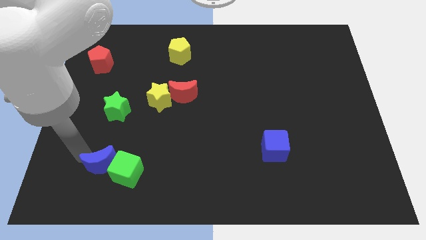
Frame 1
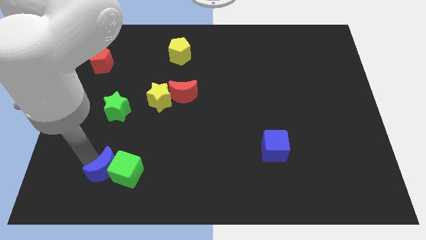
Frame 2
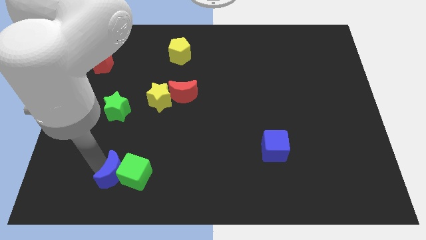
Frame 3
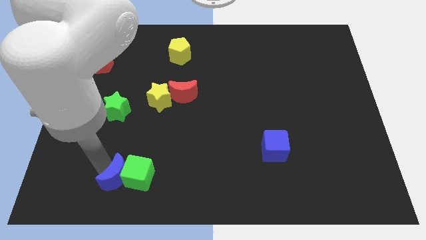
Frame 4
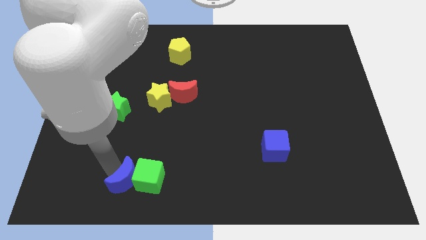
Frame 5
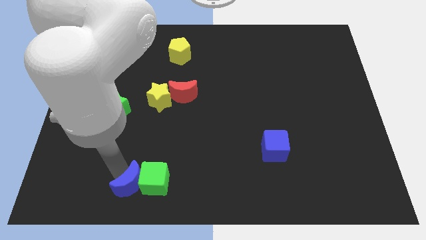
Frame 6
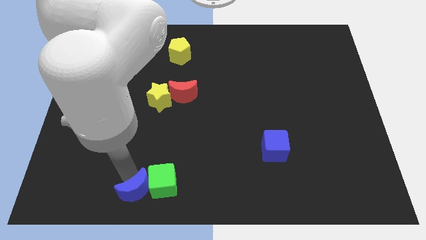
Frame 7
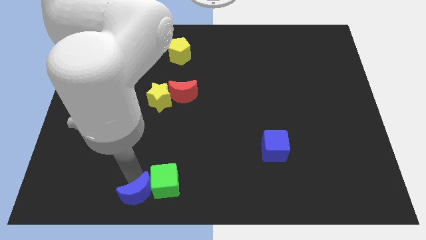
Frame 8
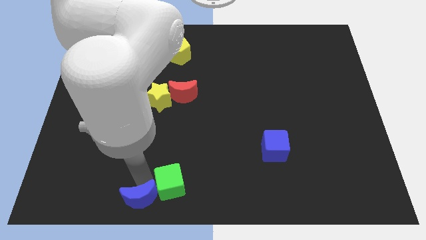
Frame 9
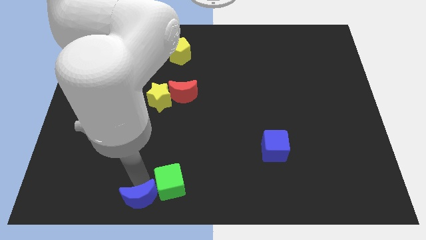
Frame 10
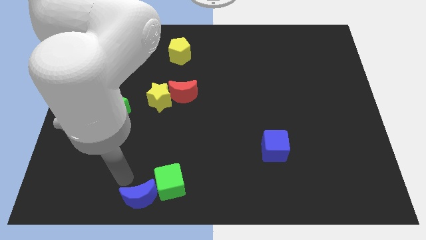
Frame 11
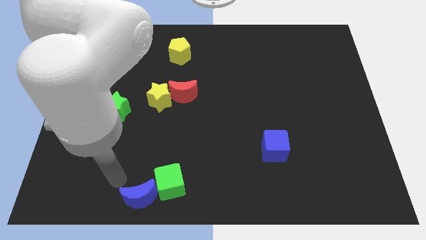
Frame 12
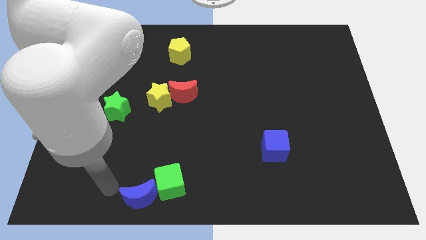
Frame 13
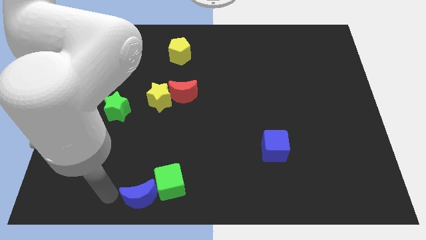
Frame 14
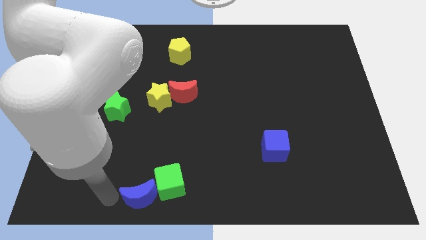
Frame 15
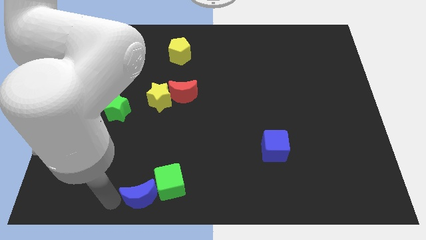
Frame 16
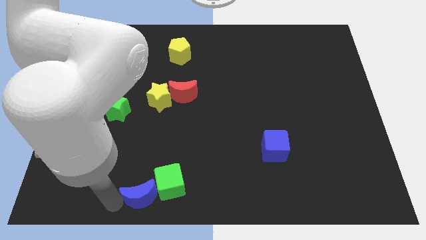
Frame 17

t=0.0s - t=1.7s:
slide the blue moon and green cube together to the bottom center of the board

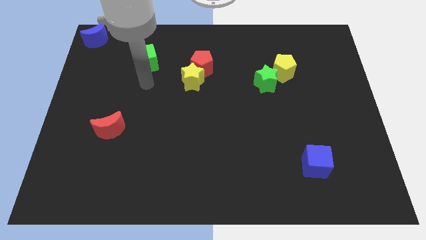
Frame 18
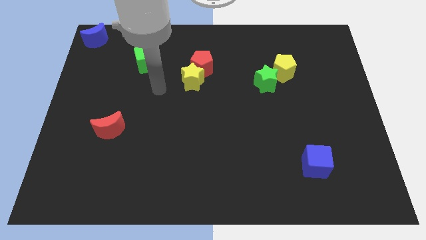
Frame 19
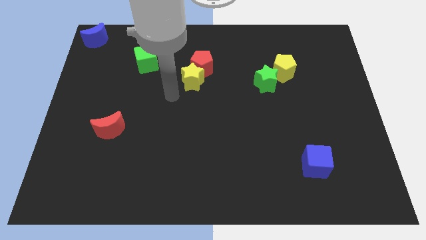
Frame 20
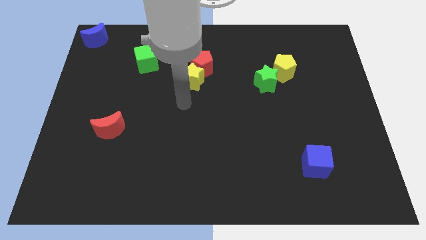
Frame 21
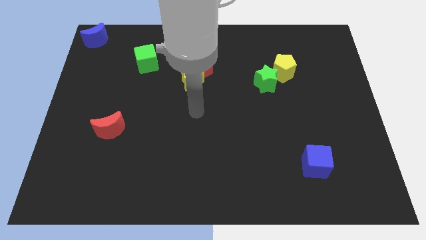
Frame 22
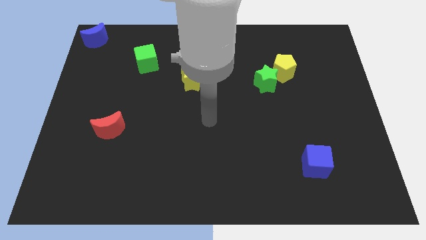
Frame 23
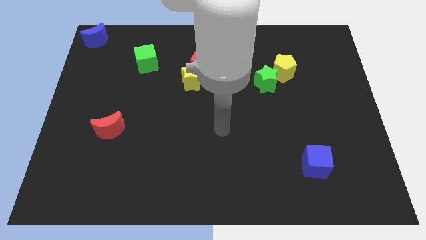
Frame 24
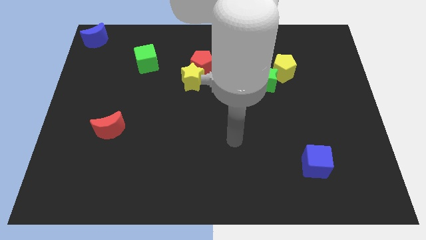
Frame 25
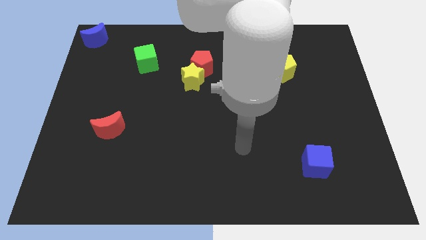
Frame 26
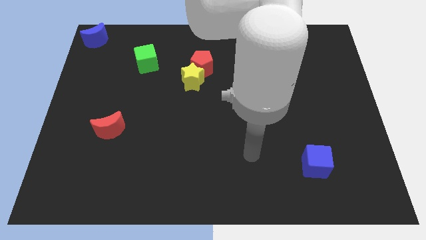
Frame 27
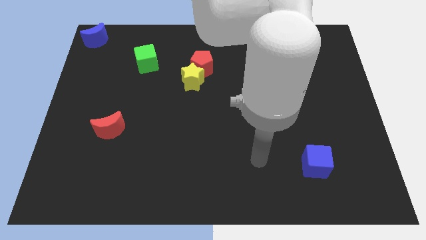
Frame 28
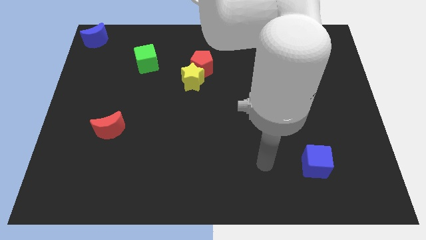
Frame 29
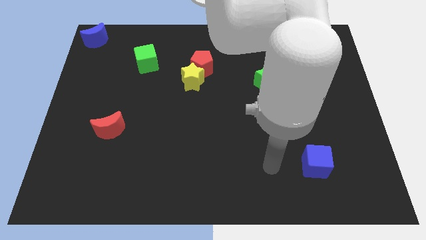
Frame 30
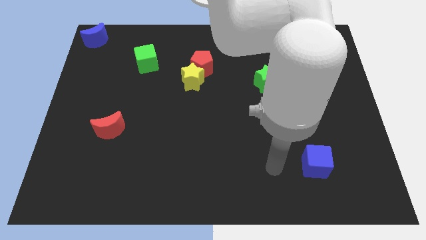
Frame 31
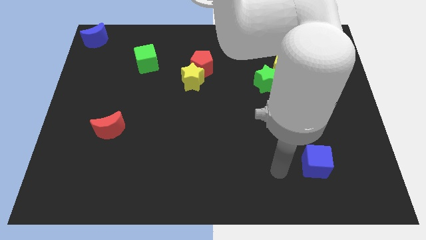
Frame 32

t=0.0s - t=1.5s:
point the arm to the left of the blue cube

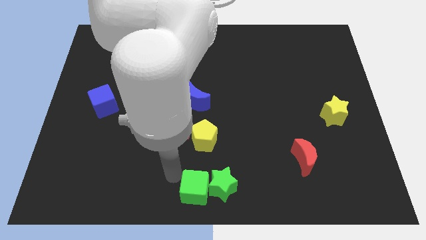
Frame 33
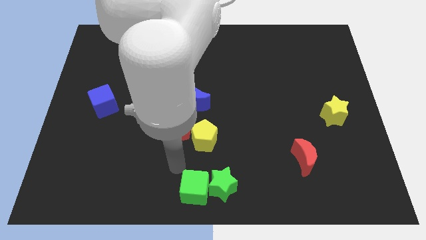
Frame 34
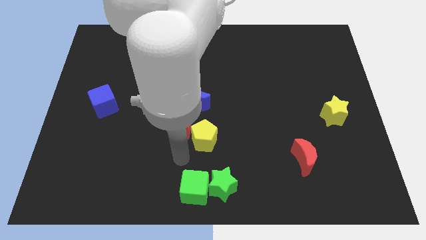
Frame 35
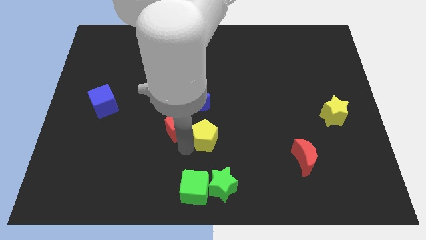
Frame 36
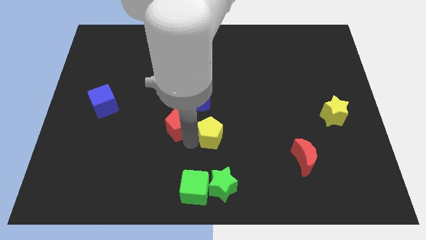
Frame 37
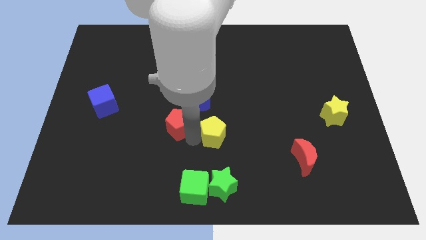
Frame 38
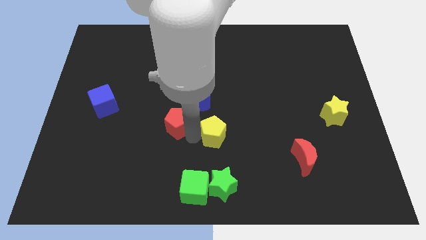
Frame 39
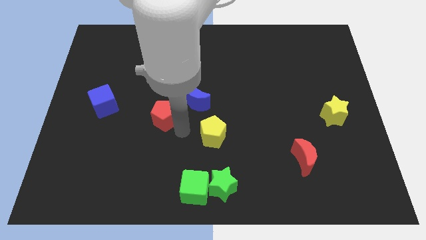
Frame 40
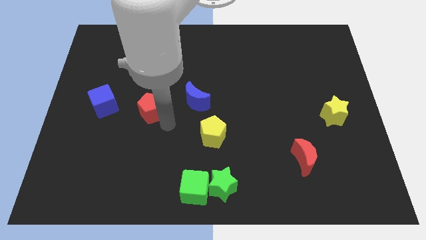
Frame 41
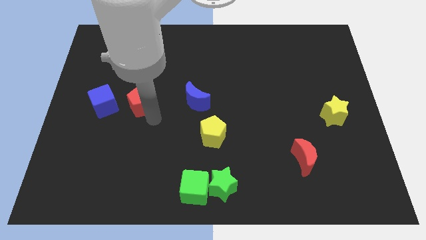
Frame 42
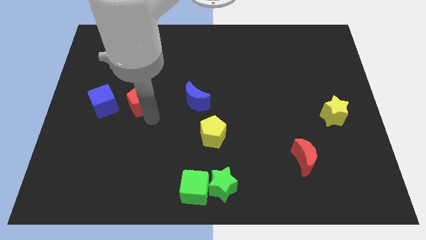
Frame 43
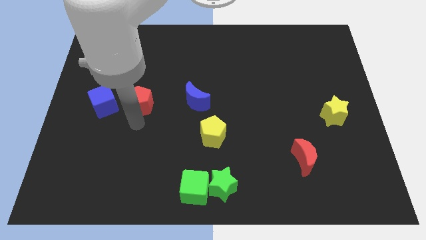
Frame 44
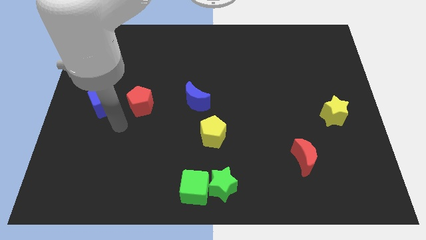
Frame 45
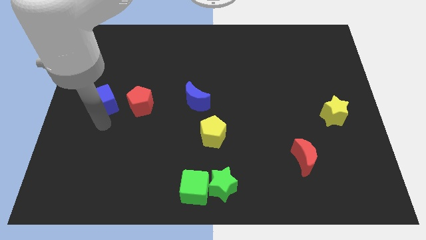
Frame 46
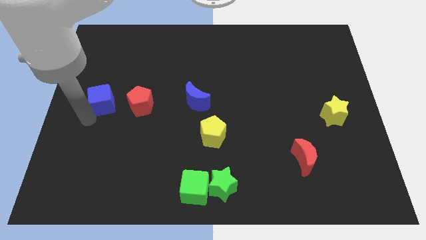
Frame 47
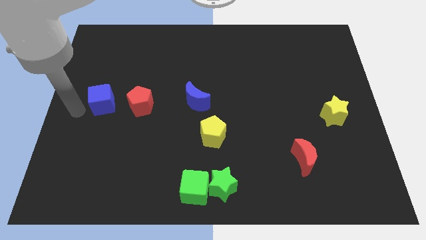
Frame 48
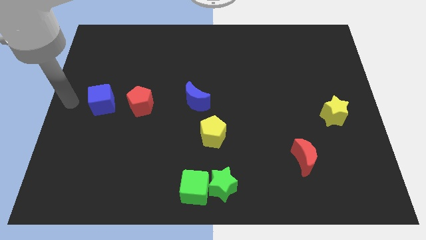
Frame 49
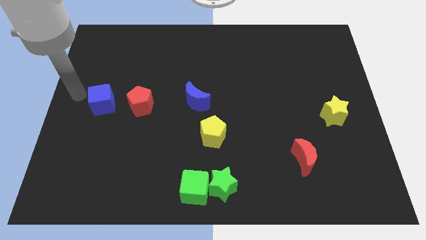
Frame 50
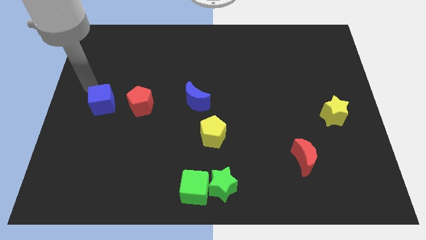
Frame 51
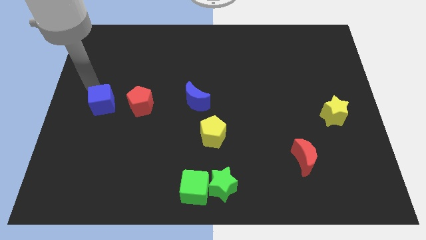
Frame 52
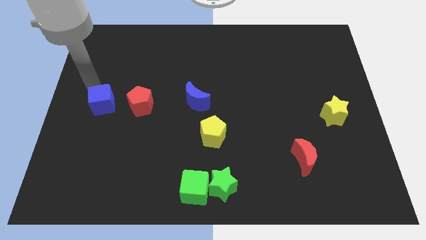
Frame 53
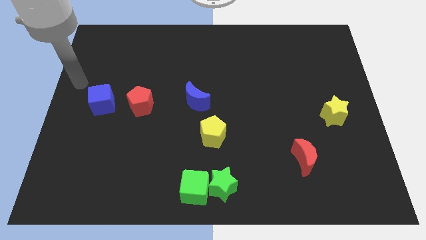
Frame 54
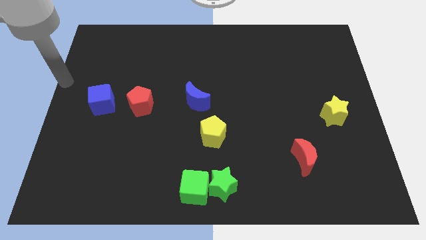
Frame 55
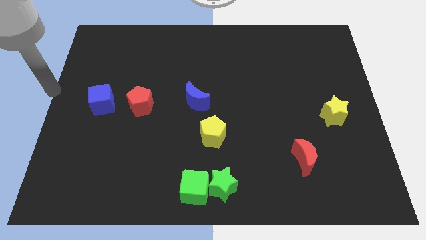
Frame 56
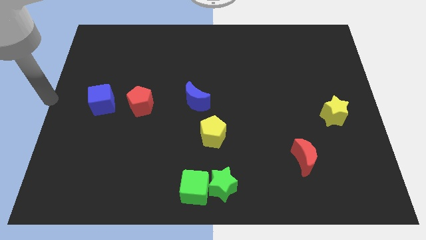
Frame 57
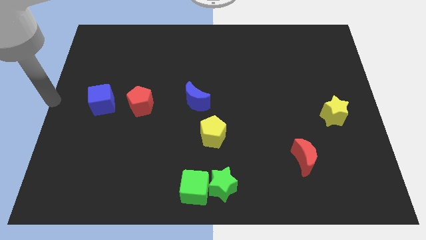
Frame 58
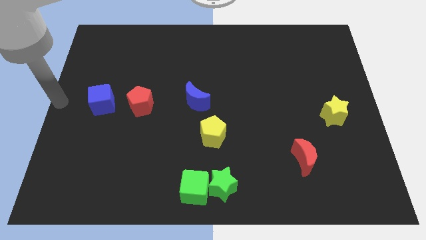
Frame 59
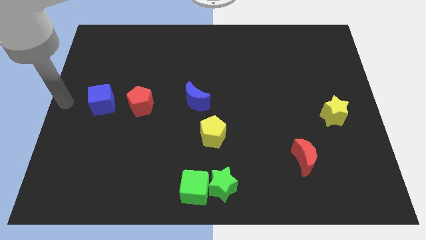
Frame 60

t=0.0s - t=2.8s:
place the red pentagon between the blue cube and blue moon

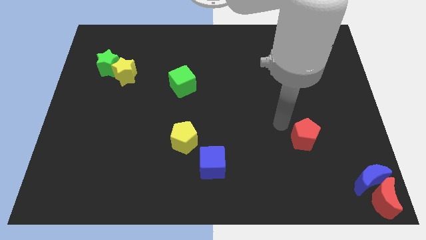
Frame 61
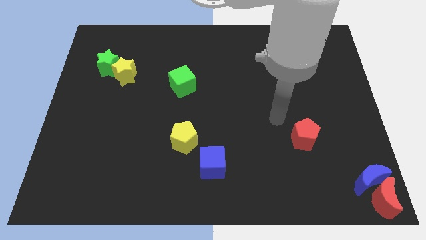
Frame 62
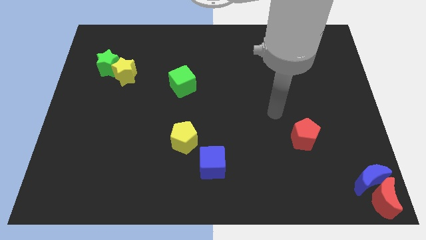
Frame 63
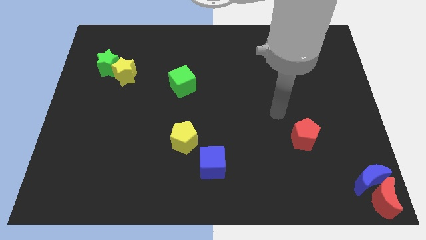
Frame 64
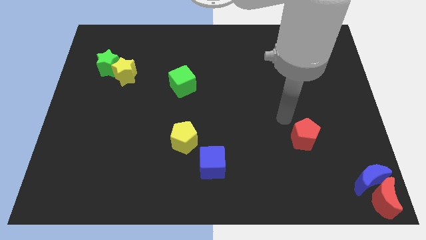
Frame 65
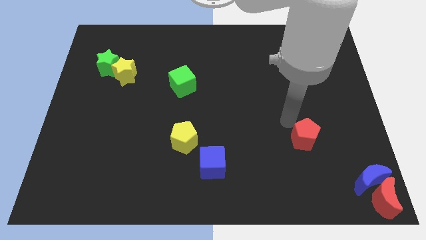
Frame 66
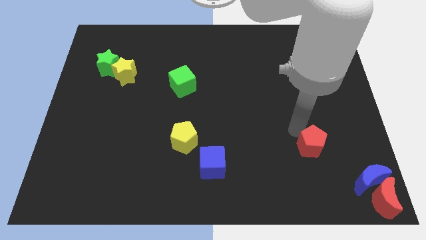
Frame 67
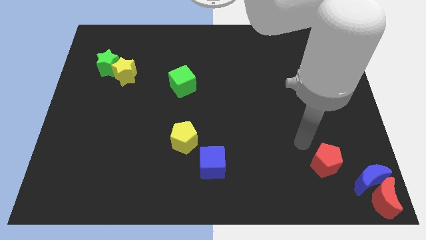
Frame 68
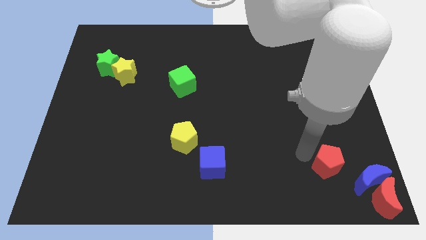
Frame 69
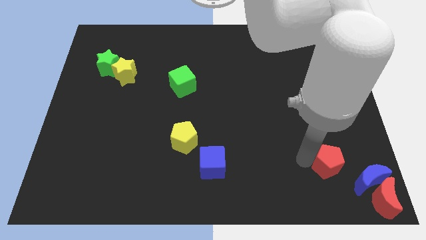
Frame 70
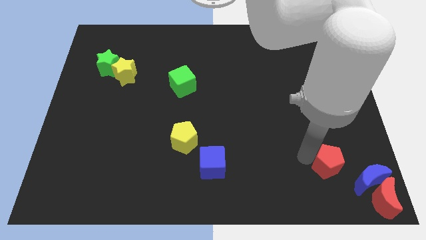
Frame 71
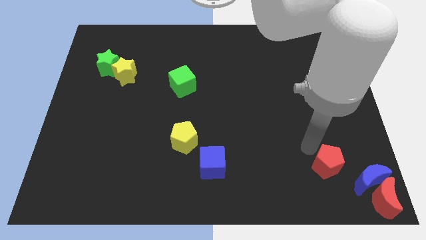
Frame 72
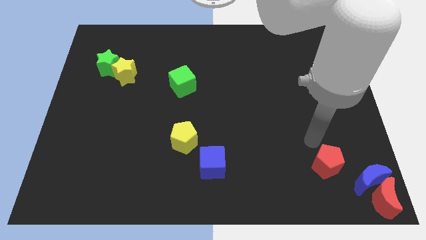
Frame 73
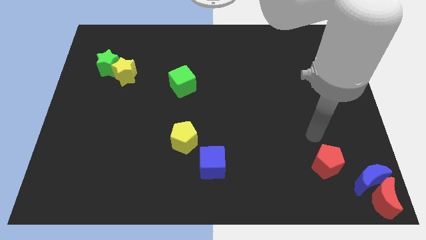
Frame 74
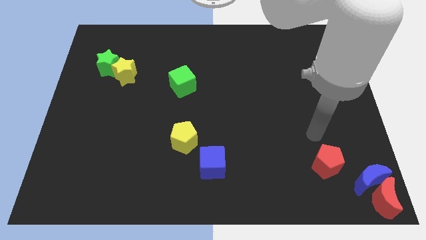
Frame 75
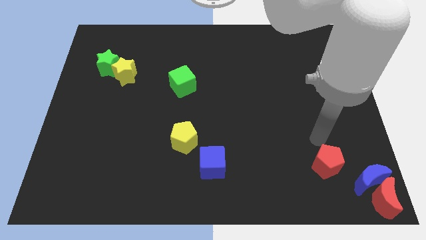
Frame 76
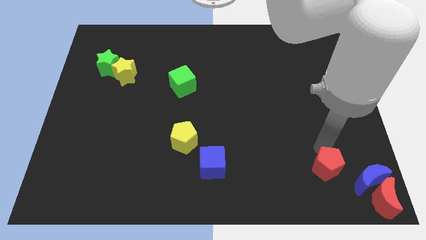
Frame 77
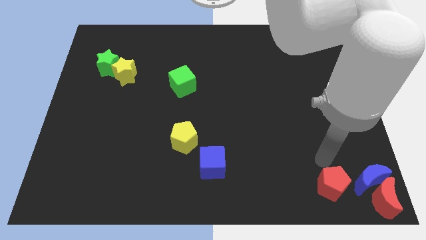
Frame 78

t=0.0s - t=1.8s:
push the red pentagon to the left side of the blue crescent

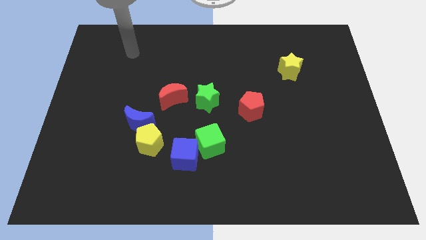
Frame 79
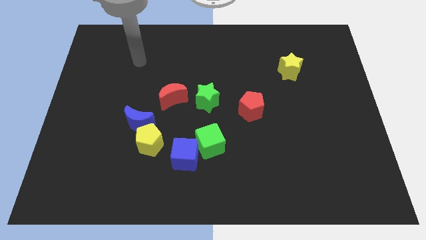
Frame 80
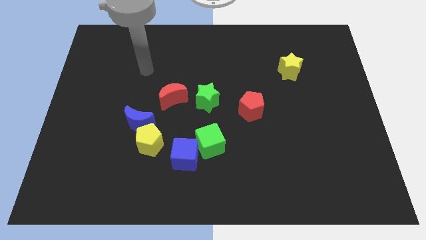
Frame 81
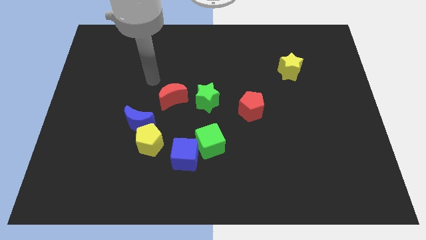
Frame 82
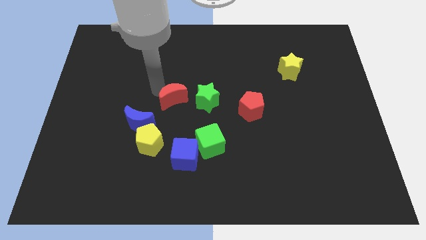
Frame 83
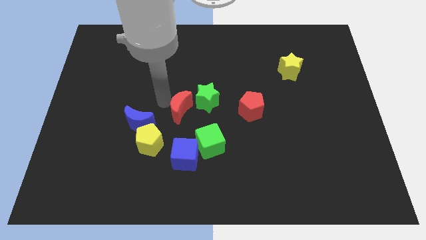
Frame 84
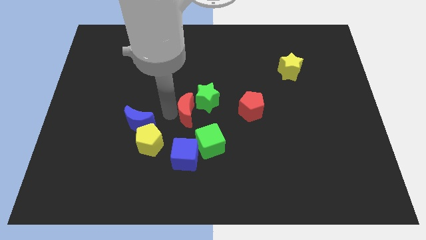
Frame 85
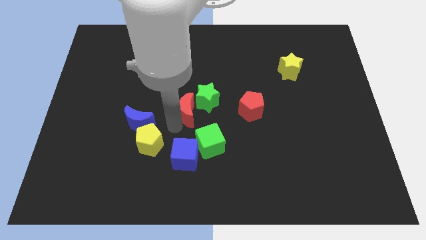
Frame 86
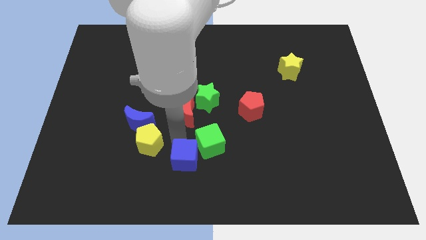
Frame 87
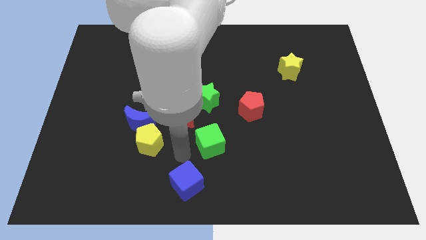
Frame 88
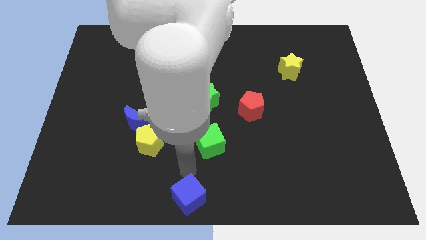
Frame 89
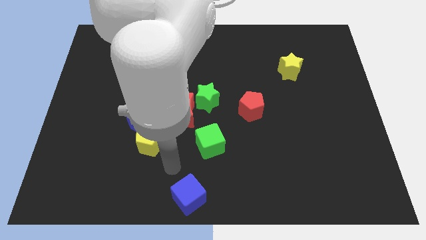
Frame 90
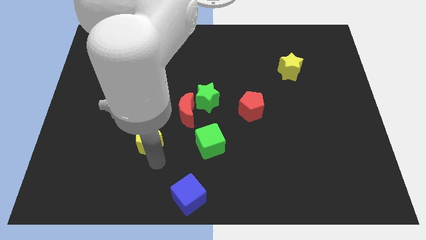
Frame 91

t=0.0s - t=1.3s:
push the blue cube to the bottom center of the board
